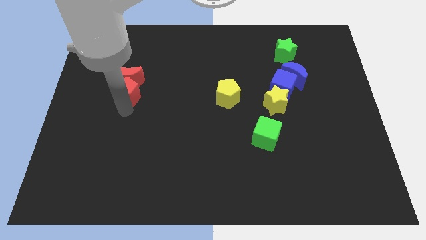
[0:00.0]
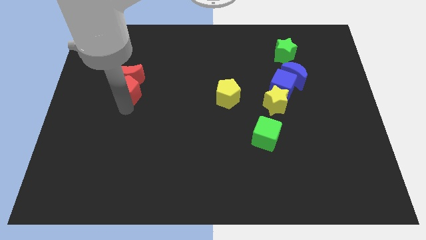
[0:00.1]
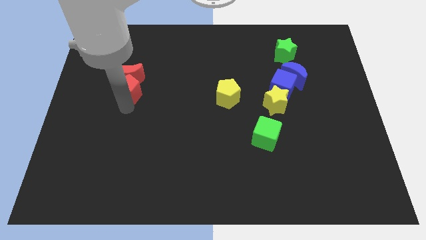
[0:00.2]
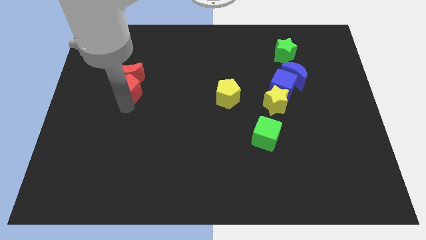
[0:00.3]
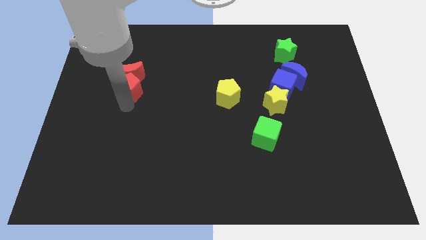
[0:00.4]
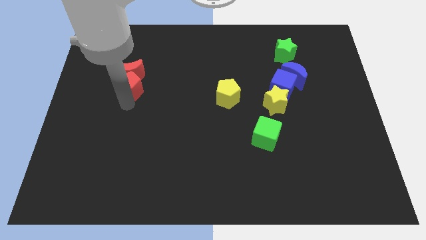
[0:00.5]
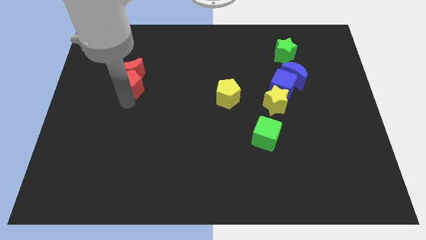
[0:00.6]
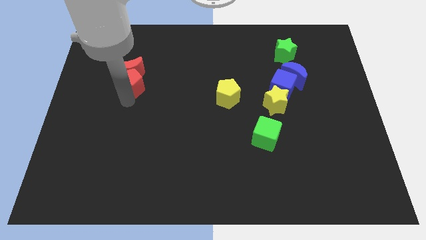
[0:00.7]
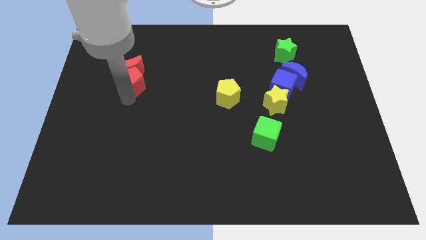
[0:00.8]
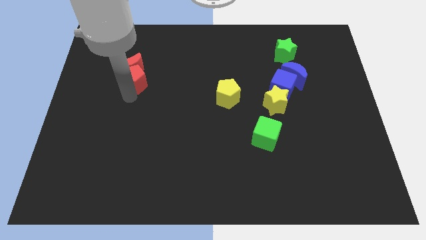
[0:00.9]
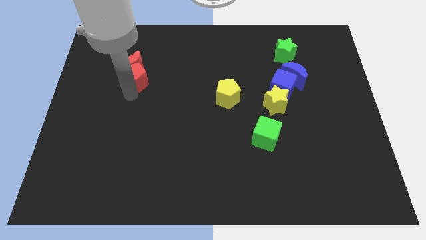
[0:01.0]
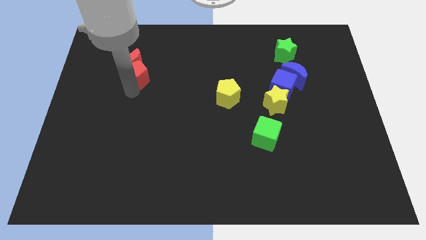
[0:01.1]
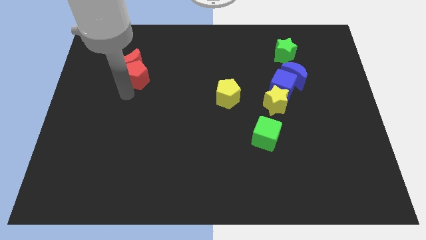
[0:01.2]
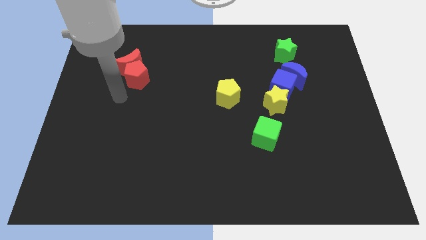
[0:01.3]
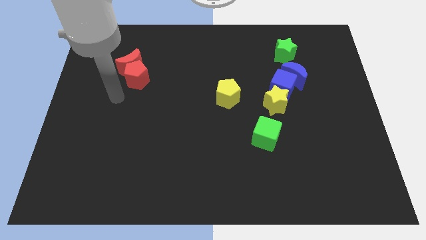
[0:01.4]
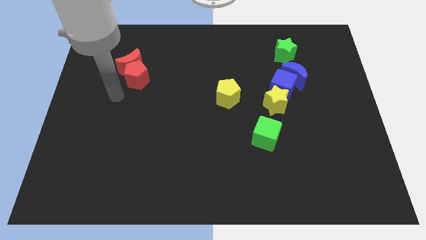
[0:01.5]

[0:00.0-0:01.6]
push the red blocks towards the top side of the board

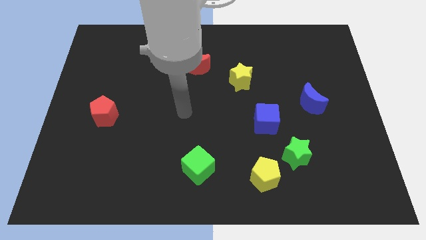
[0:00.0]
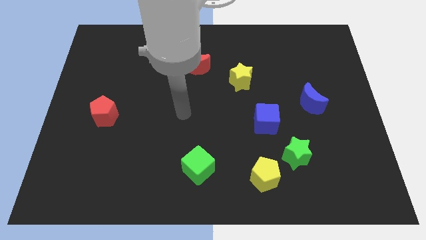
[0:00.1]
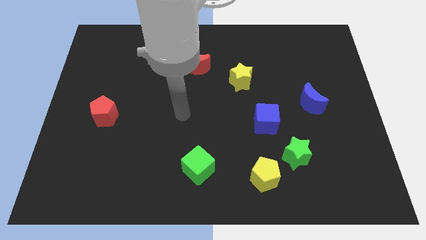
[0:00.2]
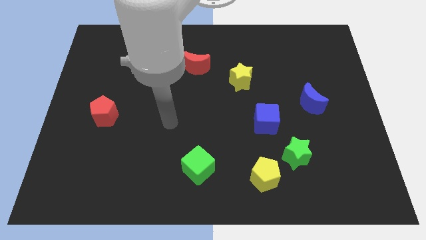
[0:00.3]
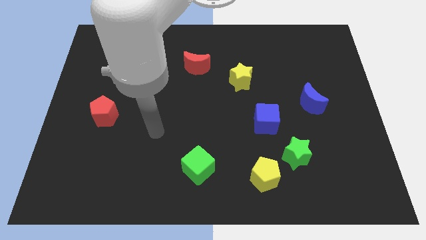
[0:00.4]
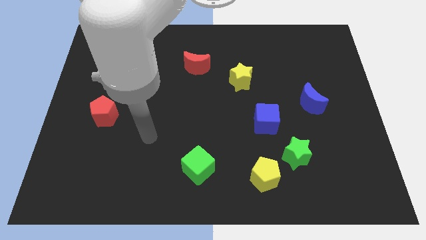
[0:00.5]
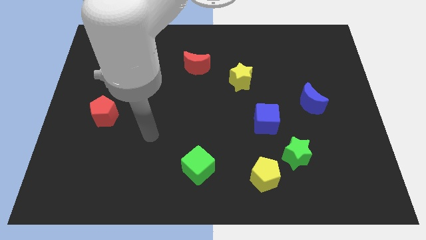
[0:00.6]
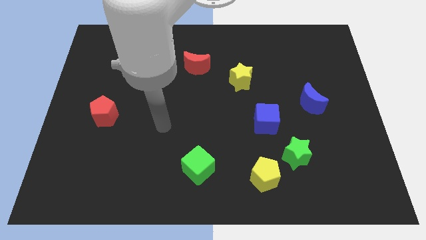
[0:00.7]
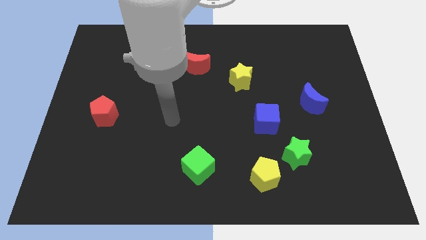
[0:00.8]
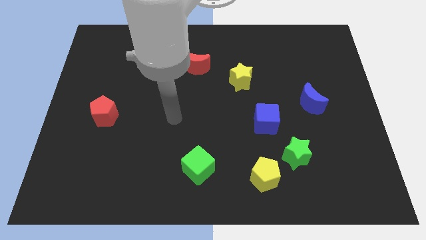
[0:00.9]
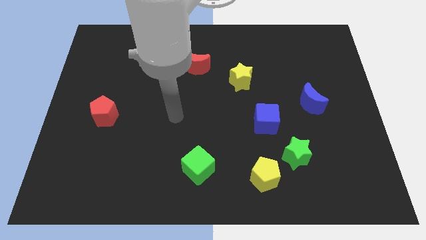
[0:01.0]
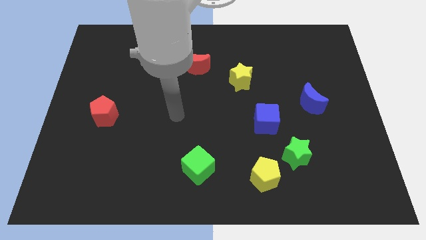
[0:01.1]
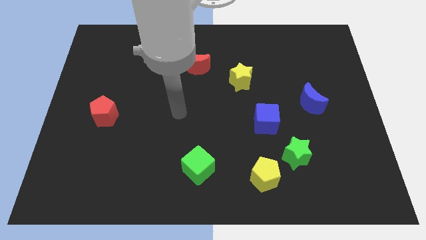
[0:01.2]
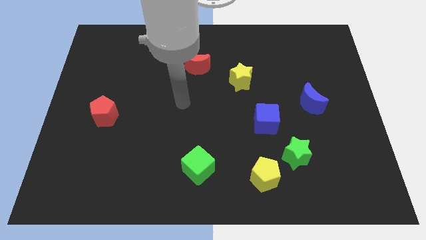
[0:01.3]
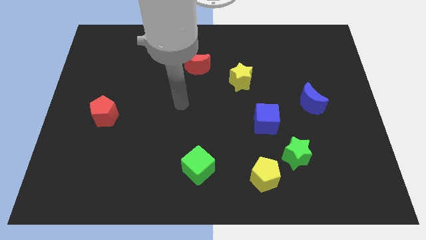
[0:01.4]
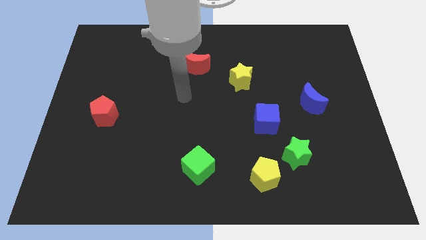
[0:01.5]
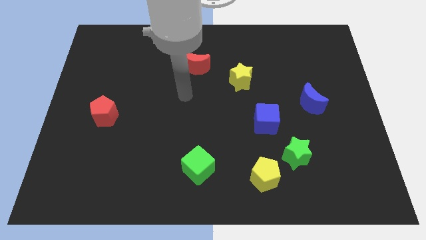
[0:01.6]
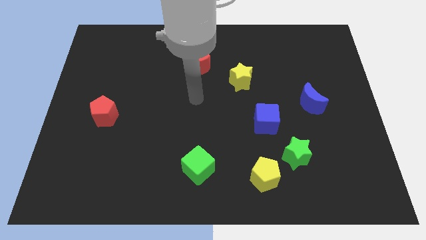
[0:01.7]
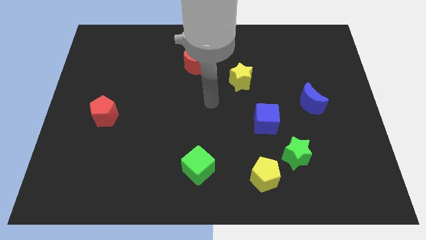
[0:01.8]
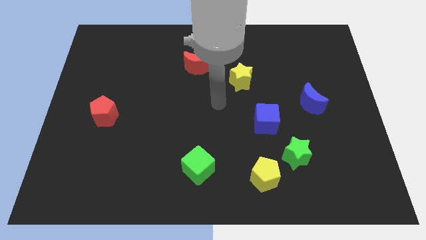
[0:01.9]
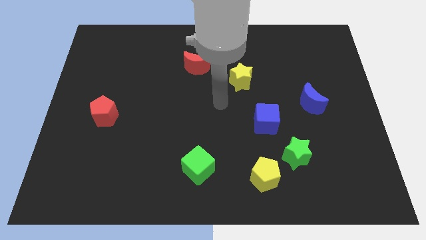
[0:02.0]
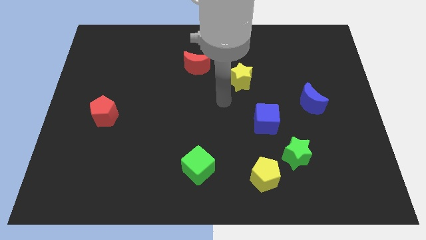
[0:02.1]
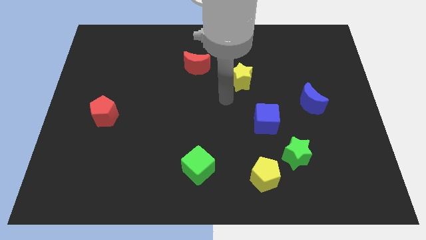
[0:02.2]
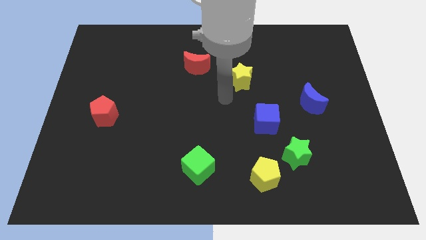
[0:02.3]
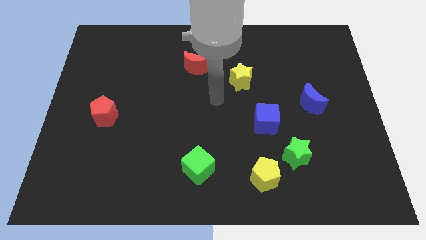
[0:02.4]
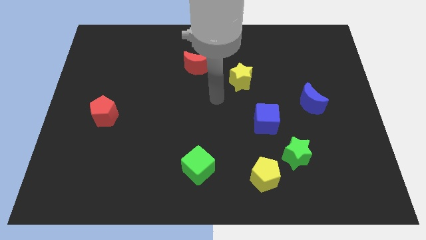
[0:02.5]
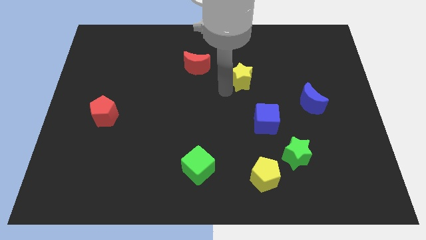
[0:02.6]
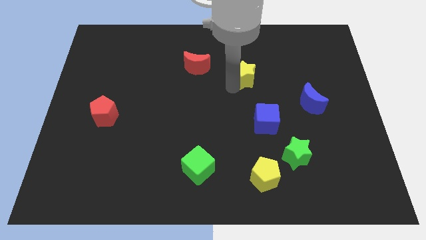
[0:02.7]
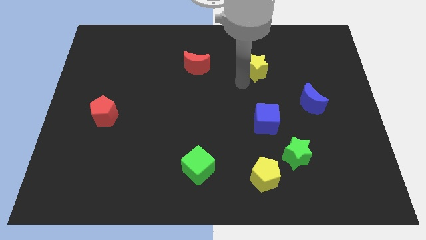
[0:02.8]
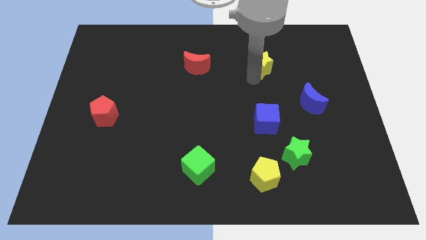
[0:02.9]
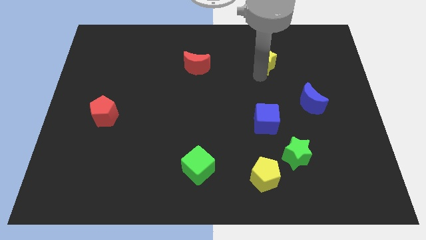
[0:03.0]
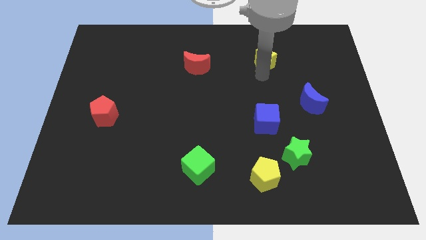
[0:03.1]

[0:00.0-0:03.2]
move the yellow star to the right of red crescent

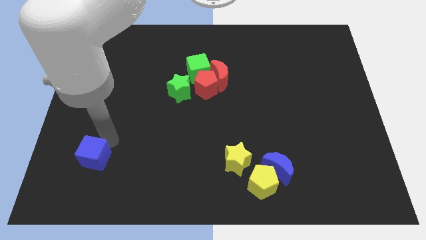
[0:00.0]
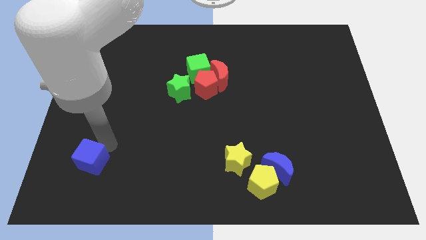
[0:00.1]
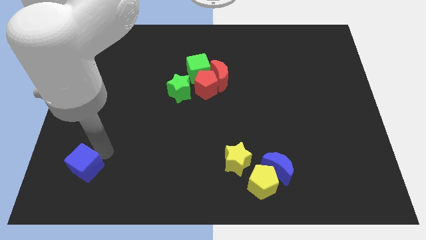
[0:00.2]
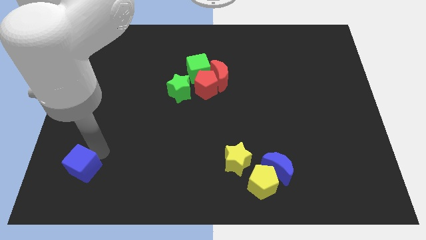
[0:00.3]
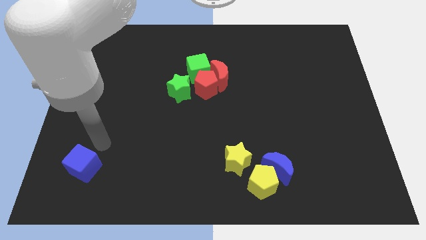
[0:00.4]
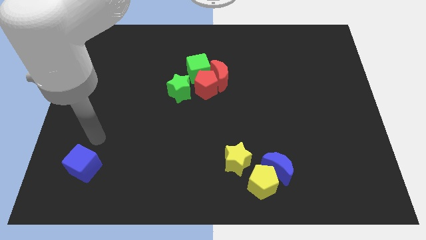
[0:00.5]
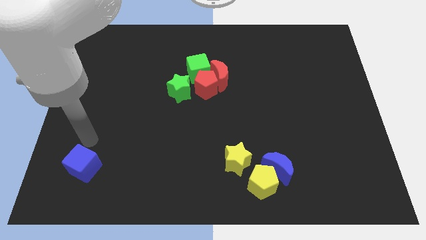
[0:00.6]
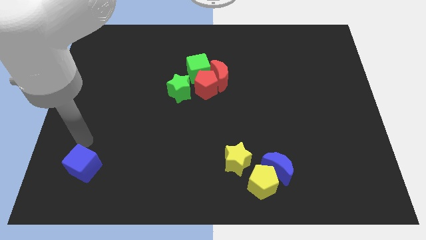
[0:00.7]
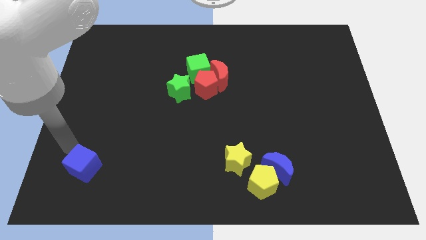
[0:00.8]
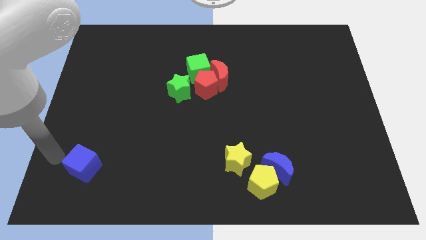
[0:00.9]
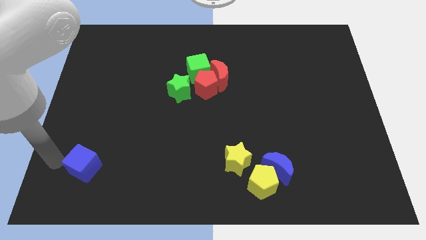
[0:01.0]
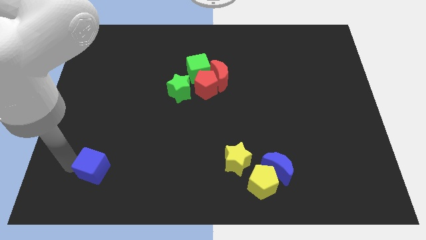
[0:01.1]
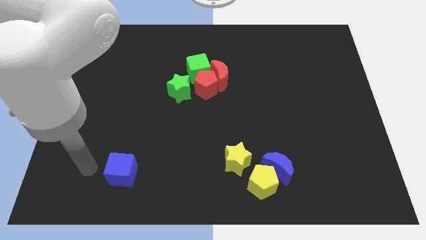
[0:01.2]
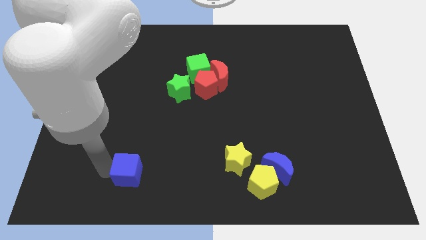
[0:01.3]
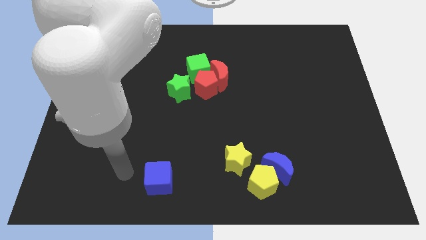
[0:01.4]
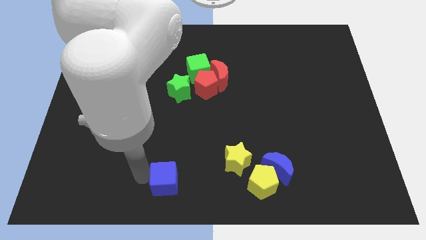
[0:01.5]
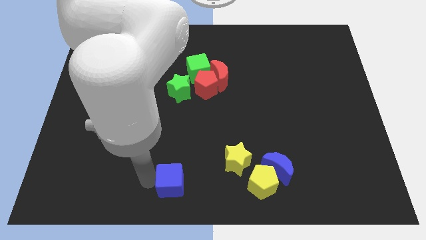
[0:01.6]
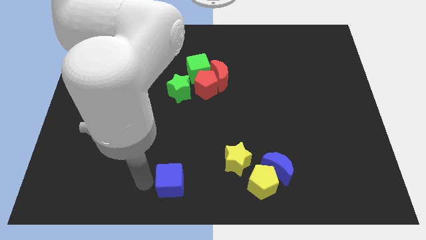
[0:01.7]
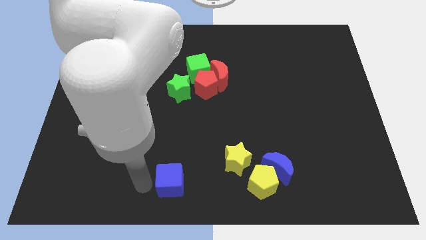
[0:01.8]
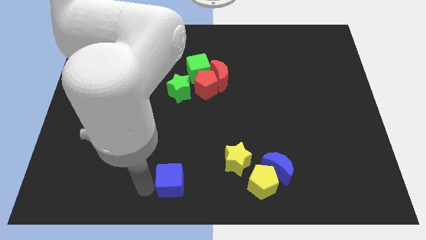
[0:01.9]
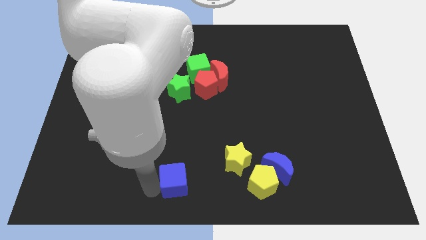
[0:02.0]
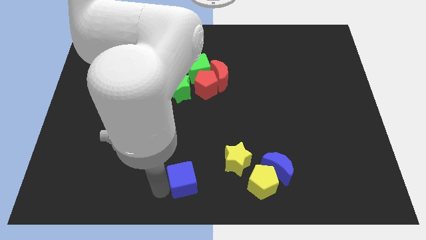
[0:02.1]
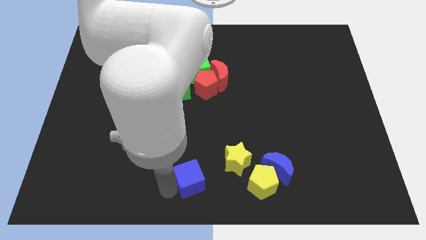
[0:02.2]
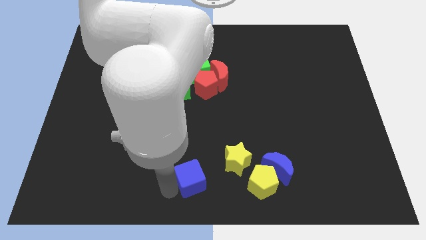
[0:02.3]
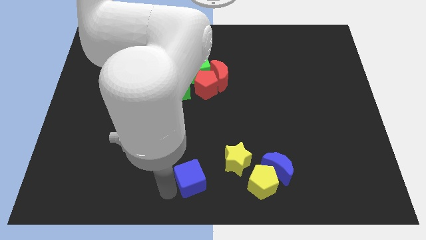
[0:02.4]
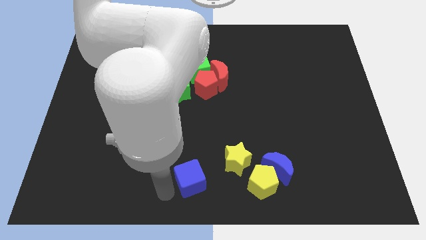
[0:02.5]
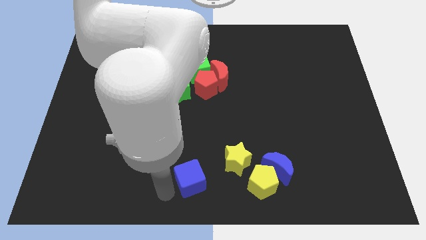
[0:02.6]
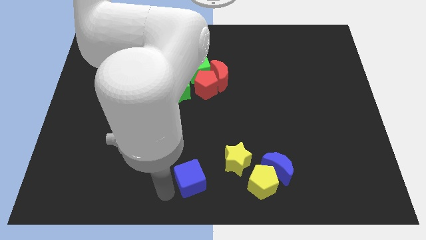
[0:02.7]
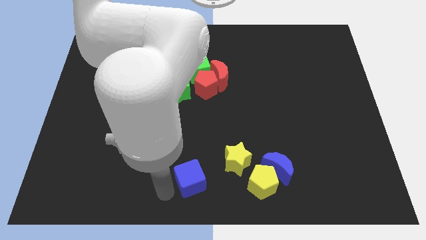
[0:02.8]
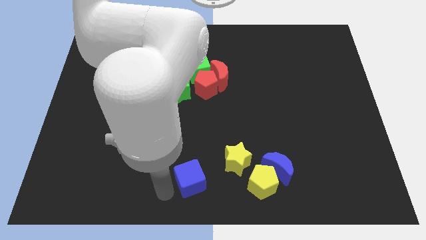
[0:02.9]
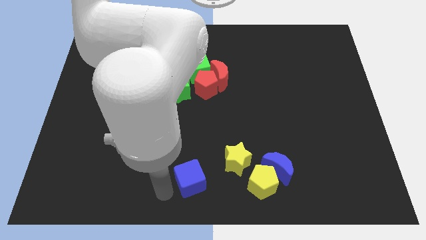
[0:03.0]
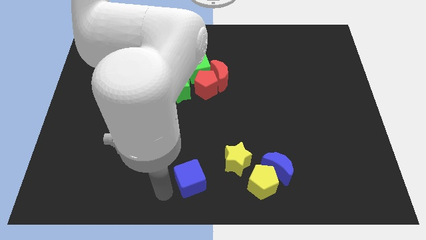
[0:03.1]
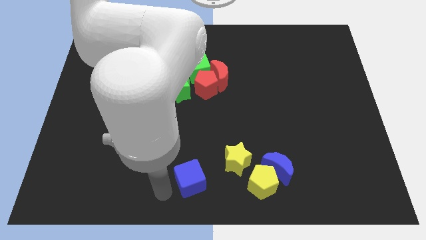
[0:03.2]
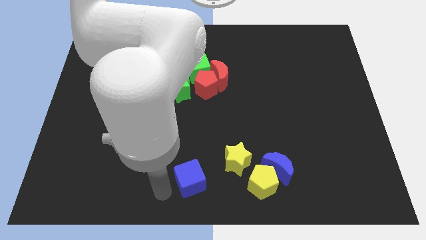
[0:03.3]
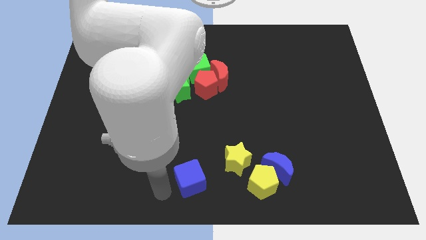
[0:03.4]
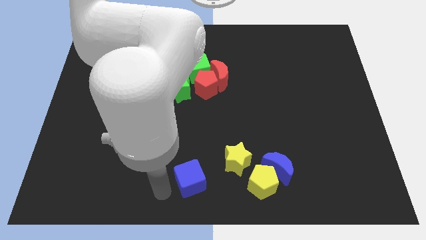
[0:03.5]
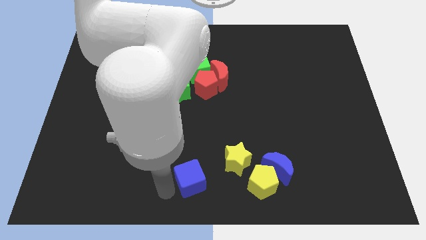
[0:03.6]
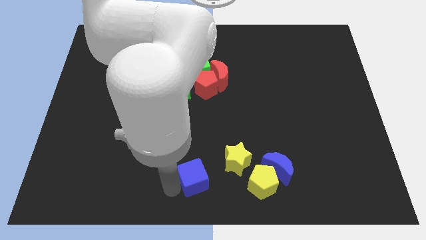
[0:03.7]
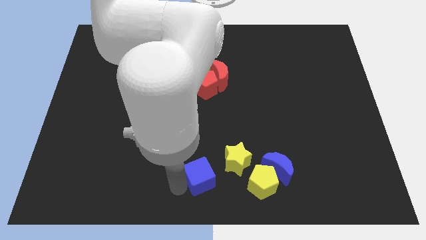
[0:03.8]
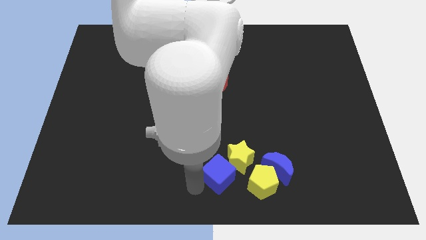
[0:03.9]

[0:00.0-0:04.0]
move the blue cube to the center bottom of the board
